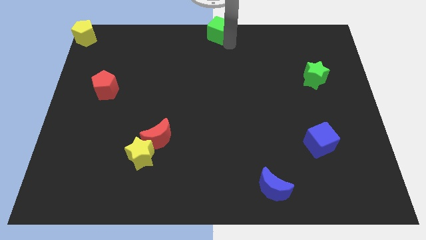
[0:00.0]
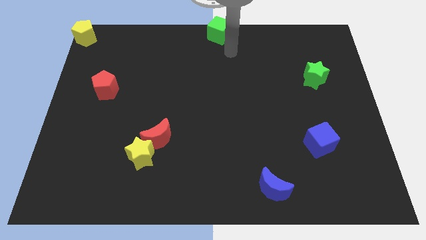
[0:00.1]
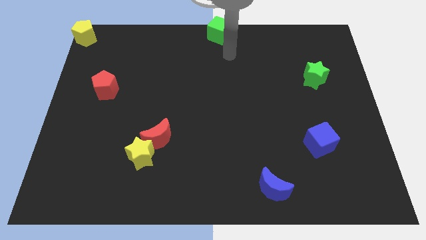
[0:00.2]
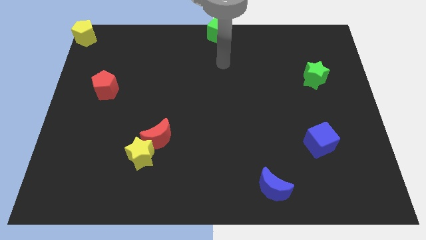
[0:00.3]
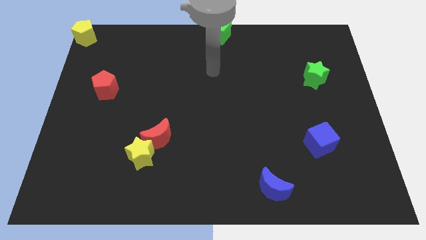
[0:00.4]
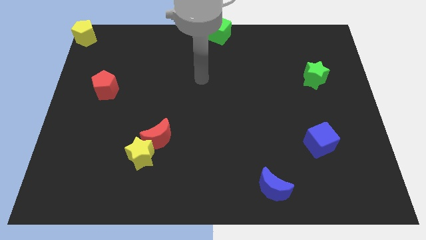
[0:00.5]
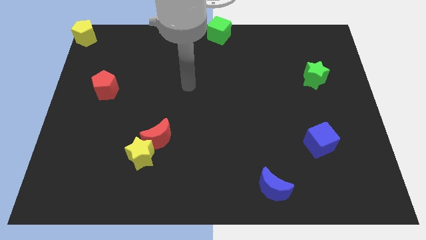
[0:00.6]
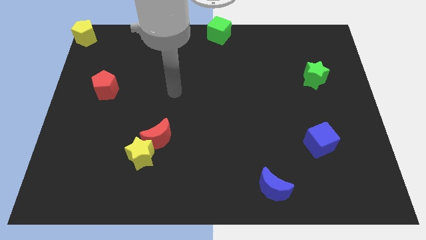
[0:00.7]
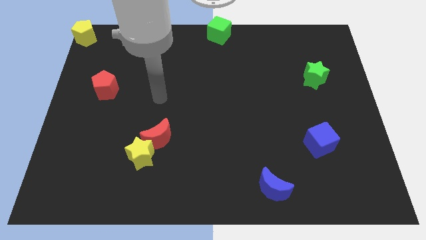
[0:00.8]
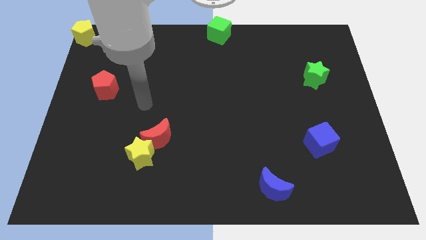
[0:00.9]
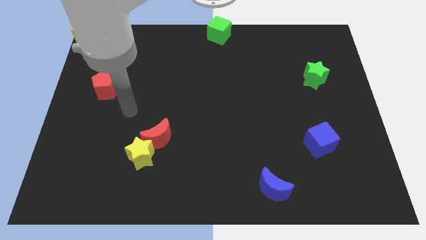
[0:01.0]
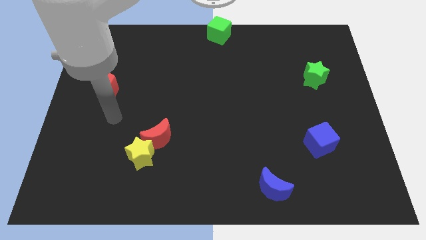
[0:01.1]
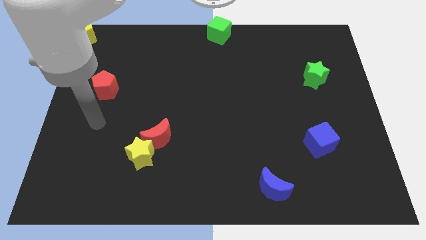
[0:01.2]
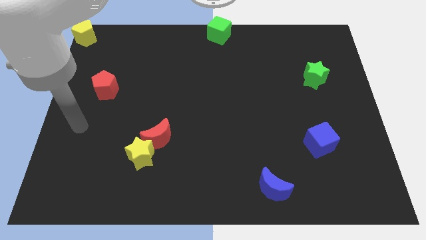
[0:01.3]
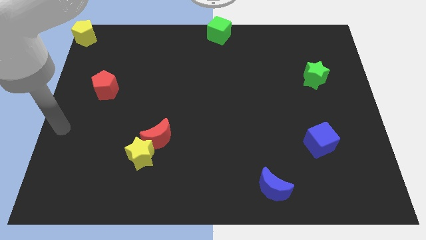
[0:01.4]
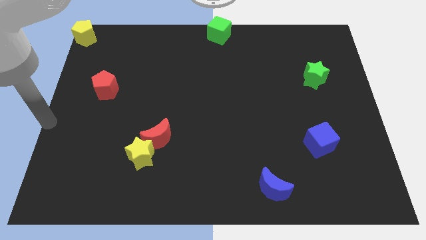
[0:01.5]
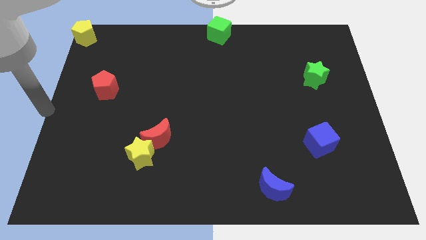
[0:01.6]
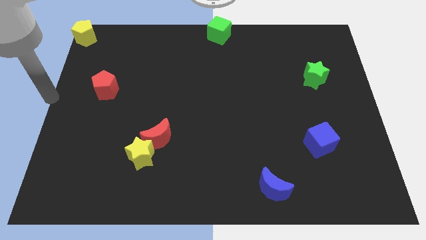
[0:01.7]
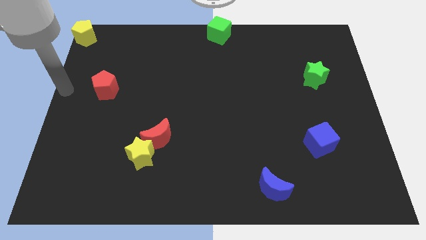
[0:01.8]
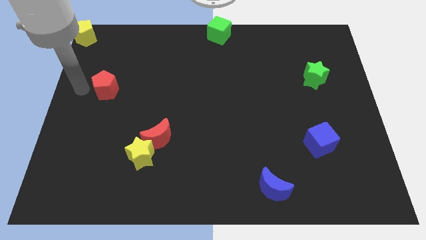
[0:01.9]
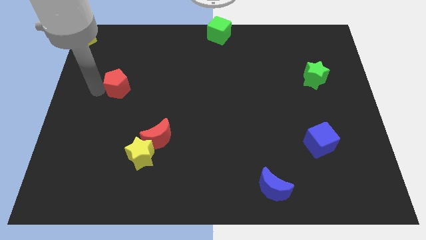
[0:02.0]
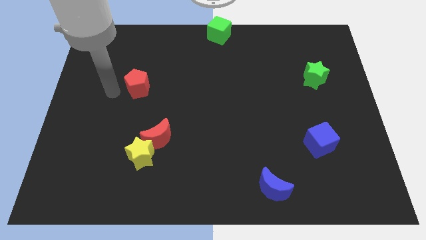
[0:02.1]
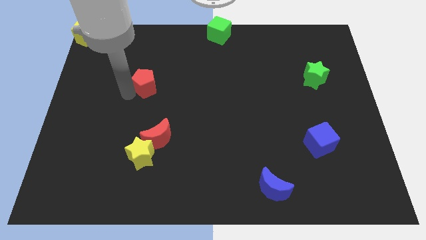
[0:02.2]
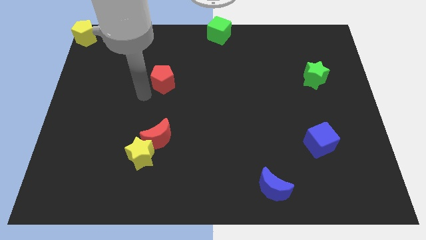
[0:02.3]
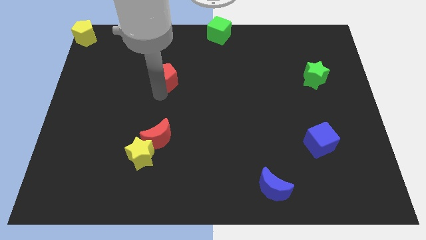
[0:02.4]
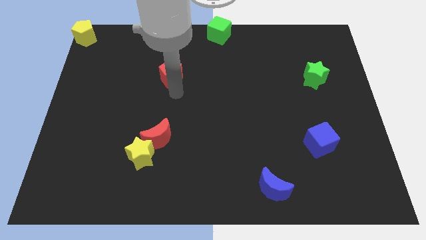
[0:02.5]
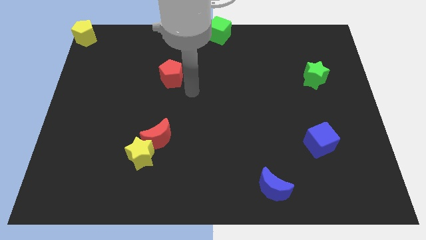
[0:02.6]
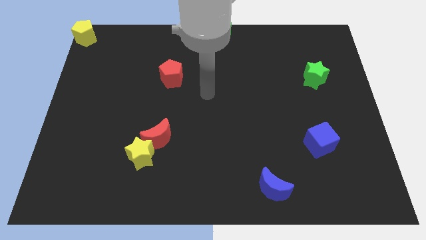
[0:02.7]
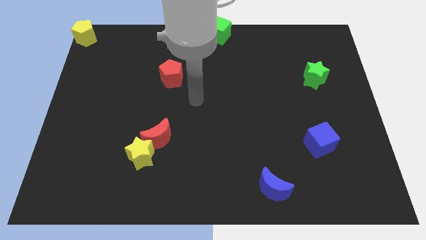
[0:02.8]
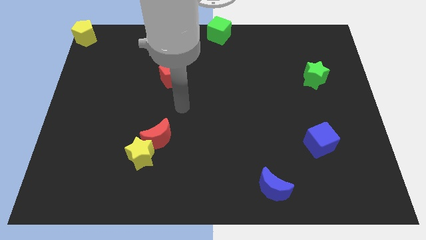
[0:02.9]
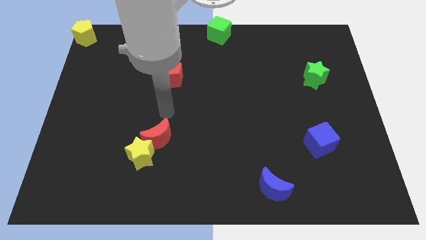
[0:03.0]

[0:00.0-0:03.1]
move the red pentagon vertically above the red moon

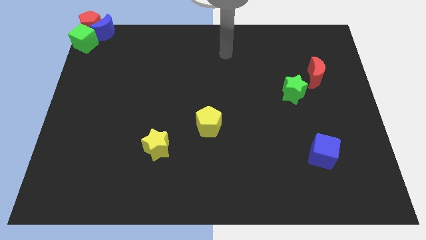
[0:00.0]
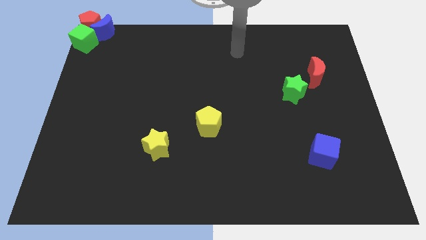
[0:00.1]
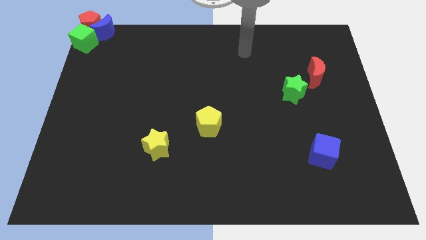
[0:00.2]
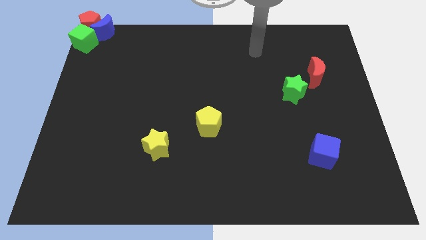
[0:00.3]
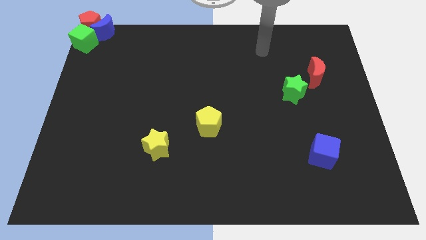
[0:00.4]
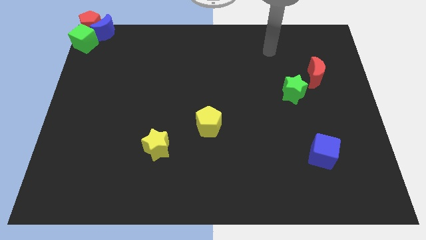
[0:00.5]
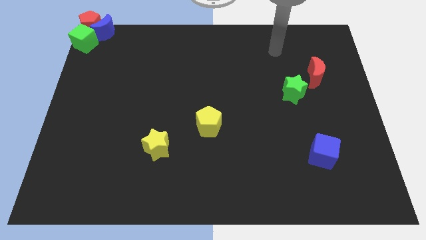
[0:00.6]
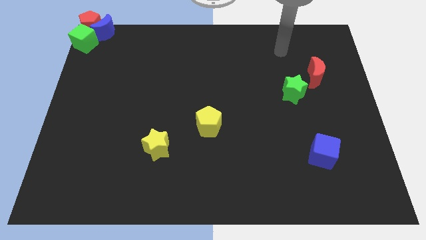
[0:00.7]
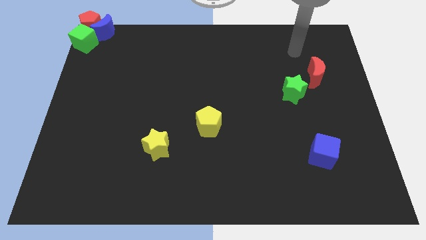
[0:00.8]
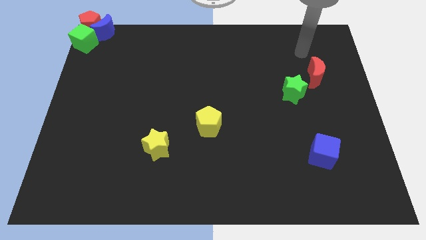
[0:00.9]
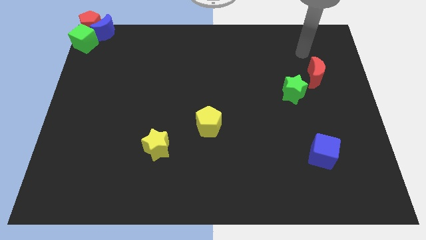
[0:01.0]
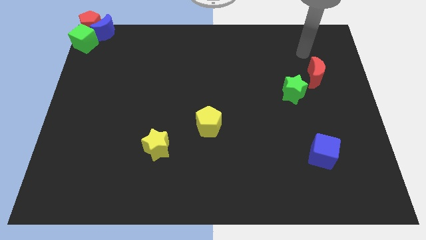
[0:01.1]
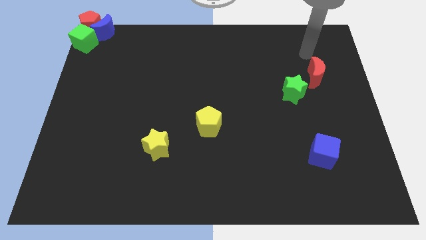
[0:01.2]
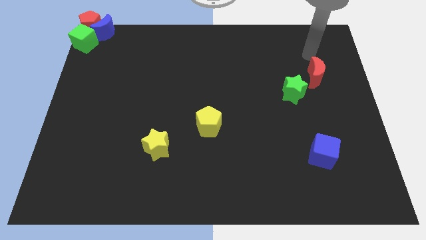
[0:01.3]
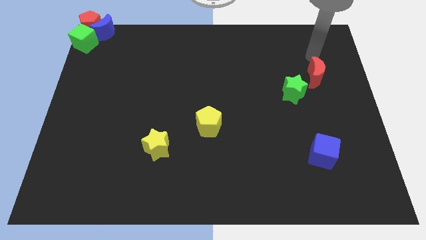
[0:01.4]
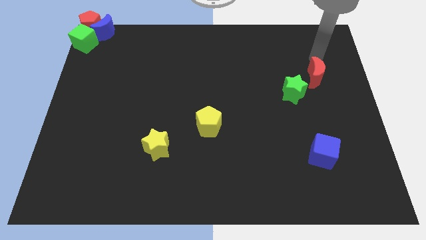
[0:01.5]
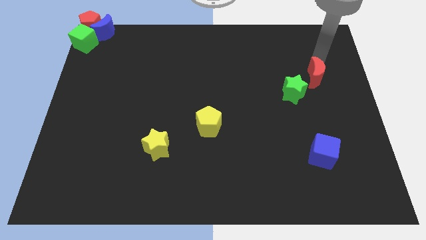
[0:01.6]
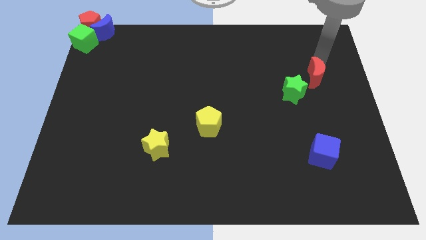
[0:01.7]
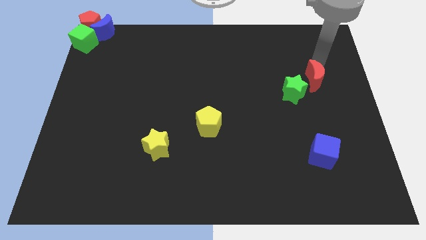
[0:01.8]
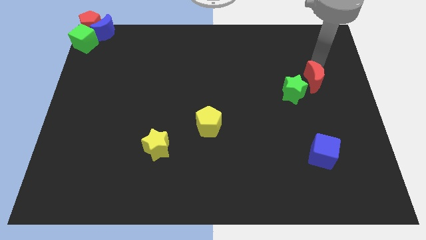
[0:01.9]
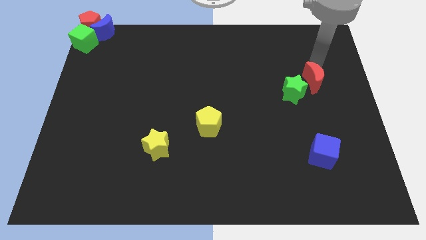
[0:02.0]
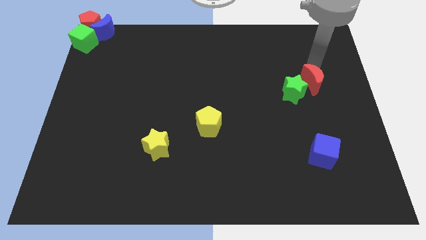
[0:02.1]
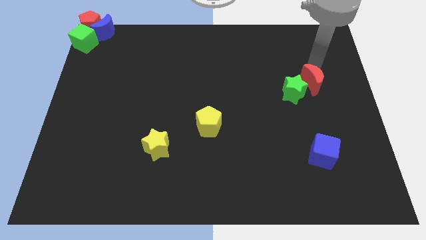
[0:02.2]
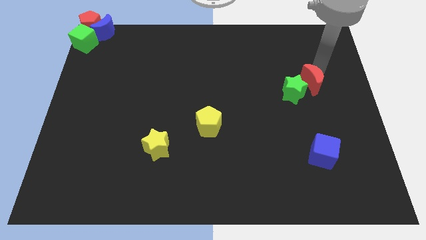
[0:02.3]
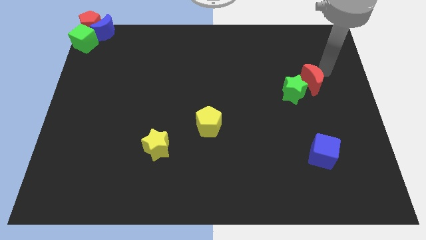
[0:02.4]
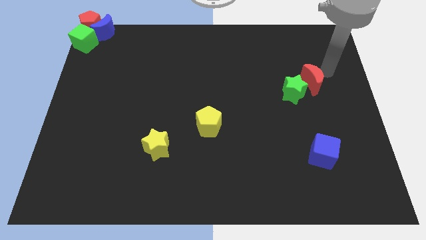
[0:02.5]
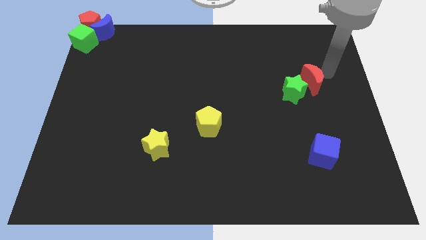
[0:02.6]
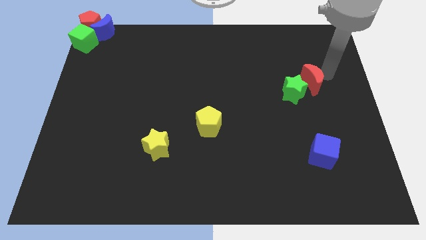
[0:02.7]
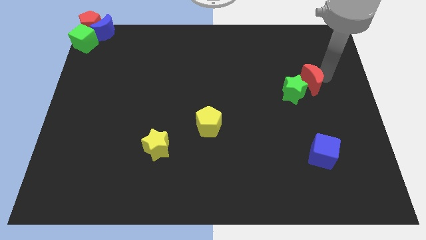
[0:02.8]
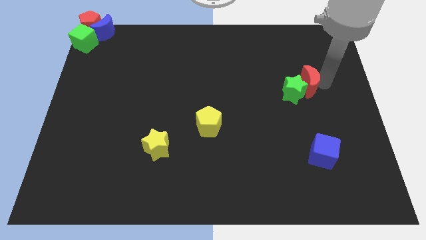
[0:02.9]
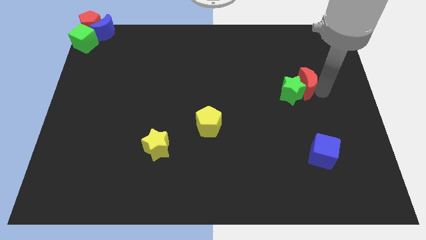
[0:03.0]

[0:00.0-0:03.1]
push red crescent to the left of the green star

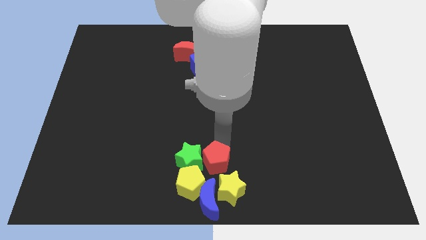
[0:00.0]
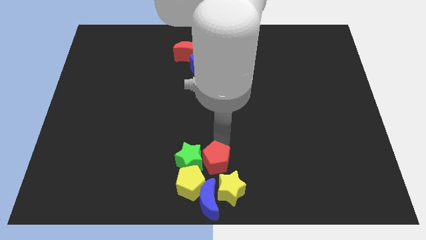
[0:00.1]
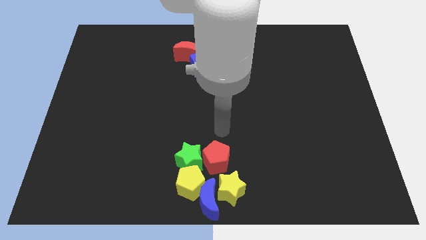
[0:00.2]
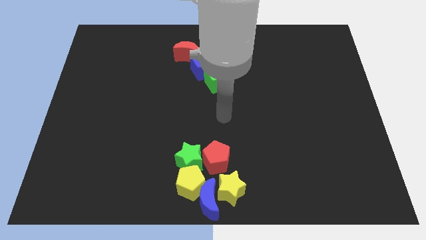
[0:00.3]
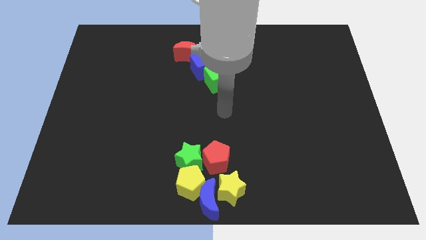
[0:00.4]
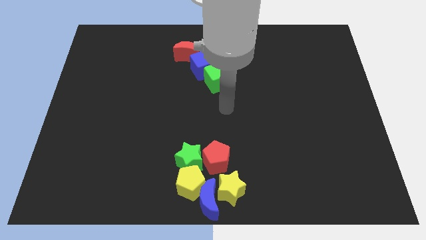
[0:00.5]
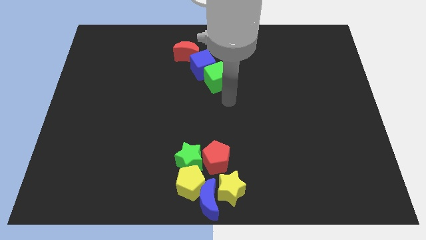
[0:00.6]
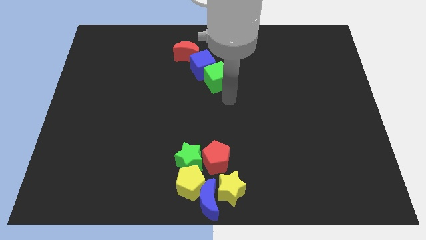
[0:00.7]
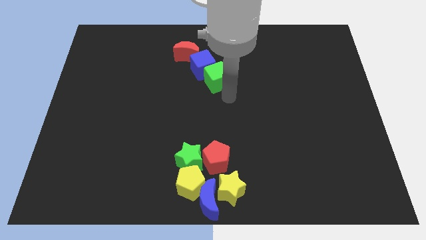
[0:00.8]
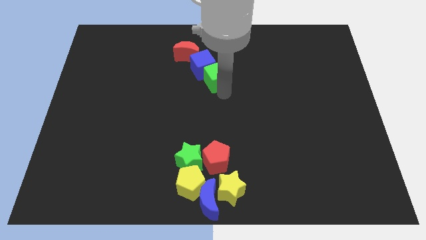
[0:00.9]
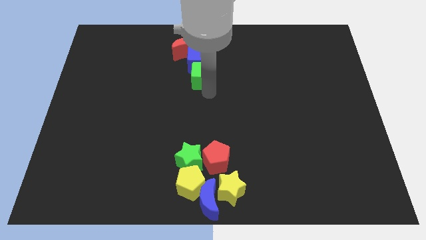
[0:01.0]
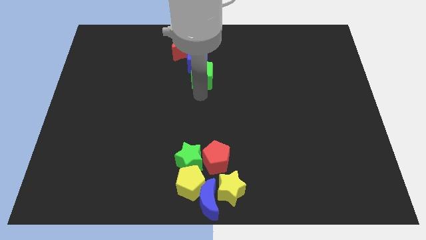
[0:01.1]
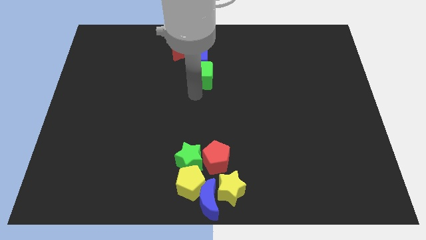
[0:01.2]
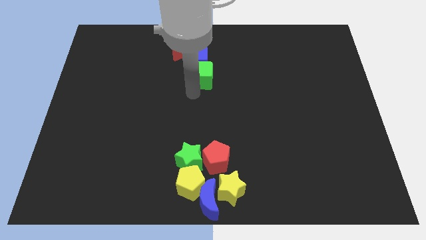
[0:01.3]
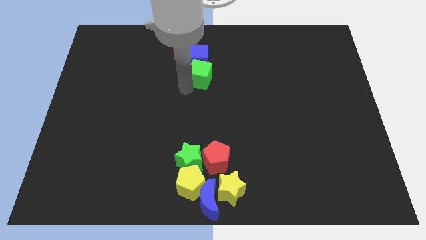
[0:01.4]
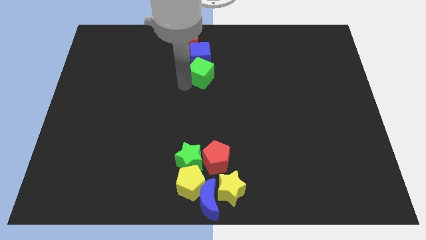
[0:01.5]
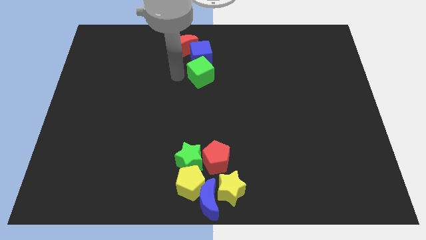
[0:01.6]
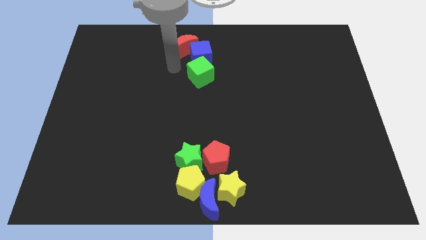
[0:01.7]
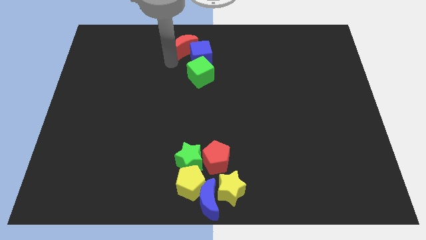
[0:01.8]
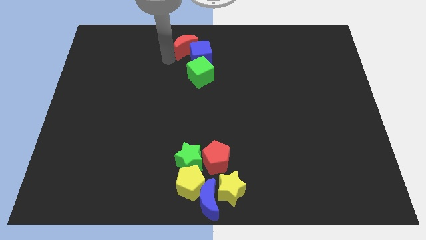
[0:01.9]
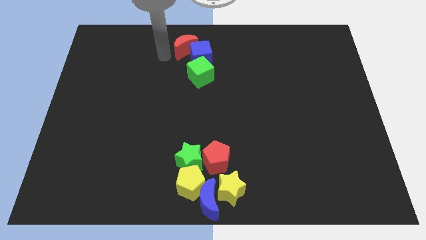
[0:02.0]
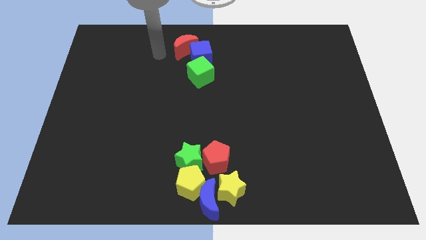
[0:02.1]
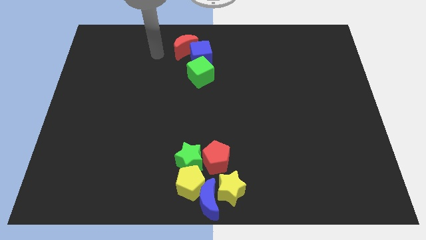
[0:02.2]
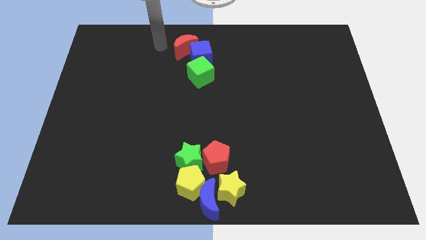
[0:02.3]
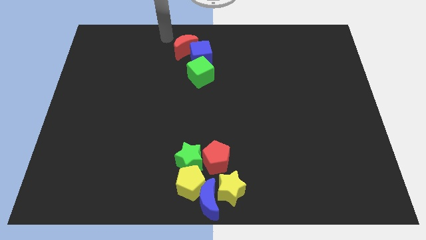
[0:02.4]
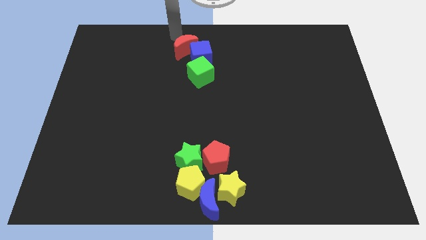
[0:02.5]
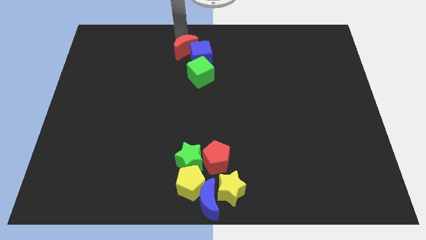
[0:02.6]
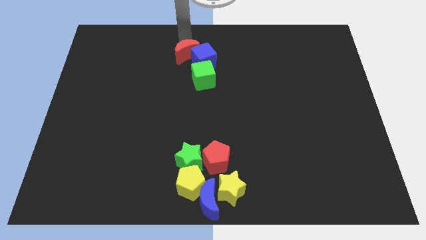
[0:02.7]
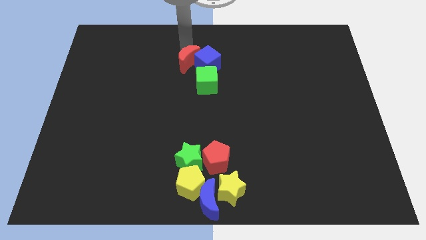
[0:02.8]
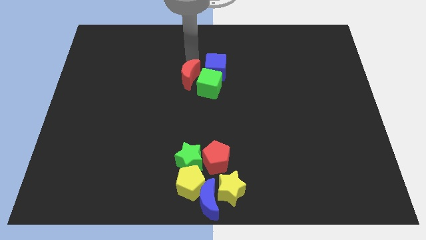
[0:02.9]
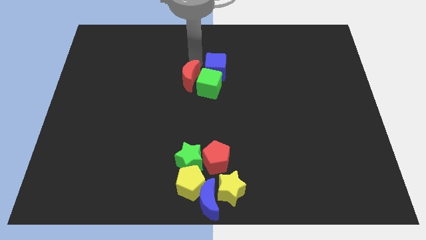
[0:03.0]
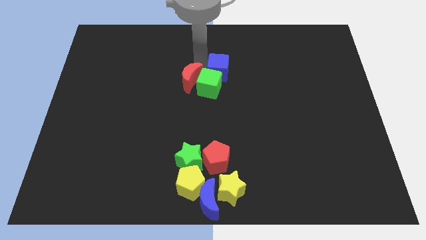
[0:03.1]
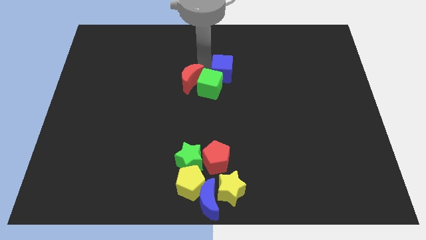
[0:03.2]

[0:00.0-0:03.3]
slide the red moon close to the green cube
